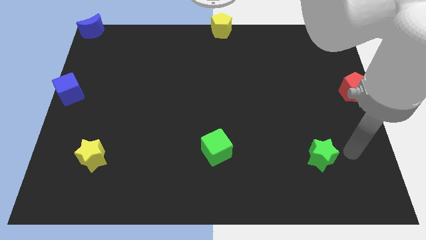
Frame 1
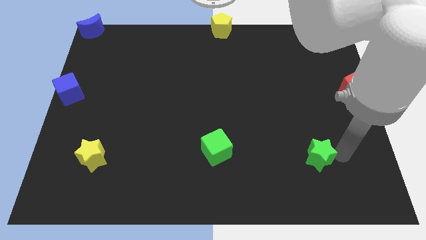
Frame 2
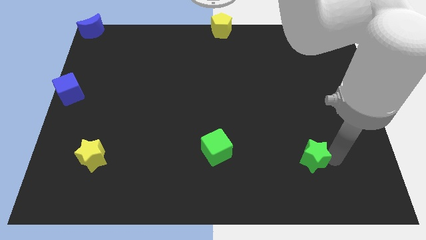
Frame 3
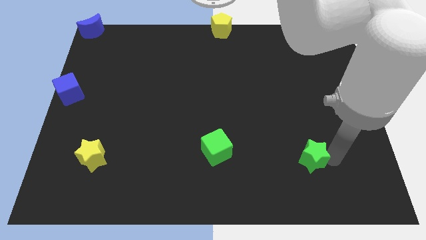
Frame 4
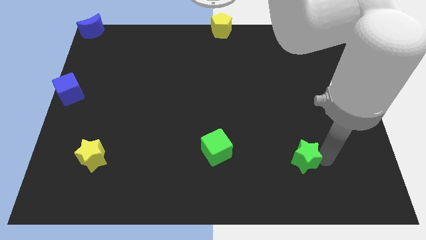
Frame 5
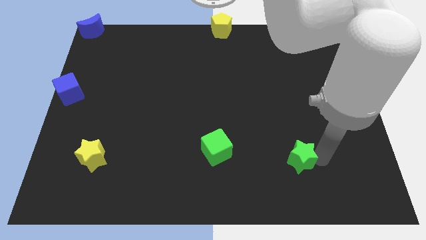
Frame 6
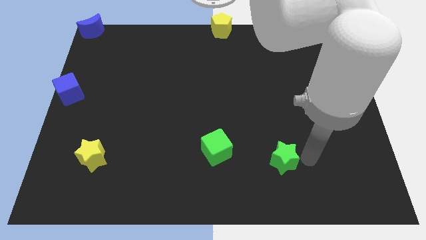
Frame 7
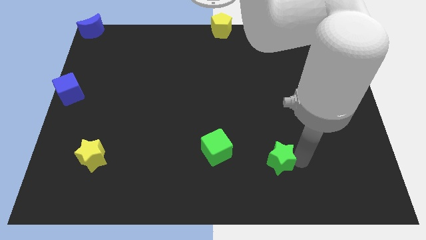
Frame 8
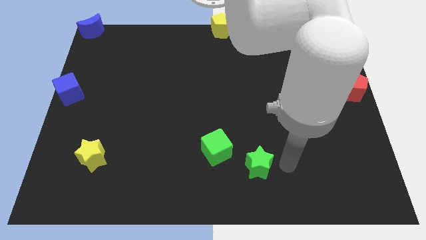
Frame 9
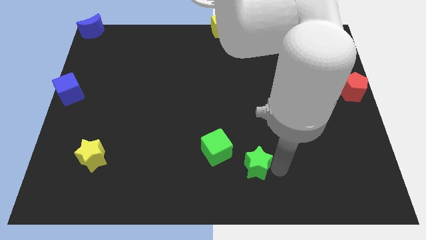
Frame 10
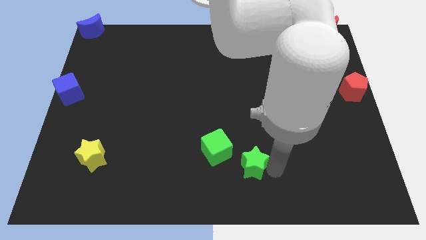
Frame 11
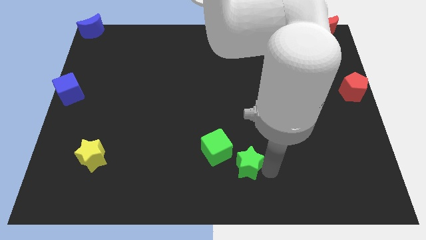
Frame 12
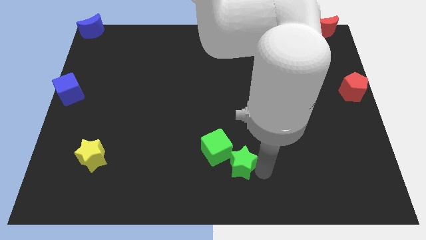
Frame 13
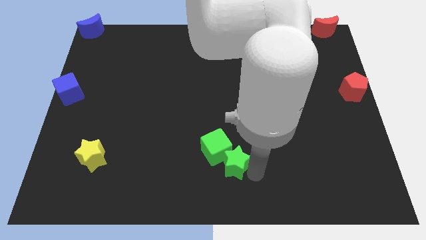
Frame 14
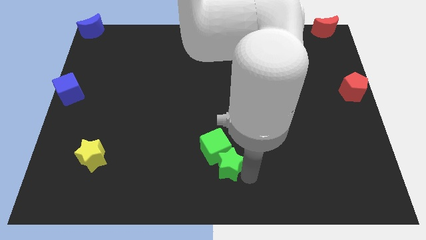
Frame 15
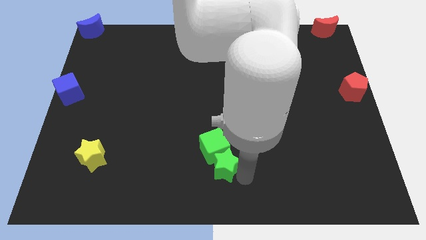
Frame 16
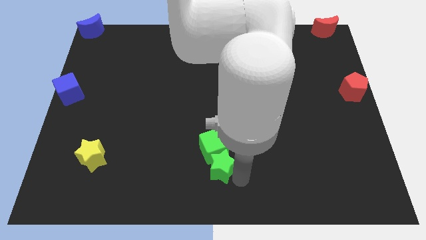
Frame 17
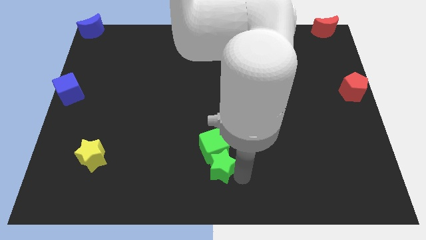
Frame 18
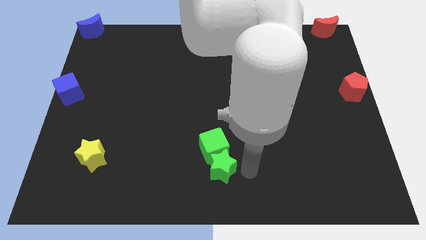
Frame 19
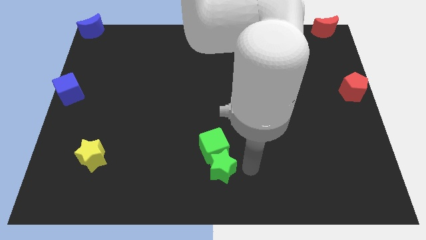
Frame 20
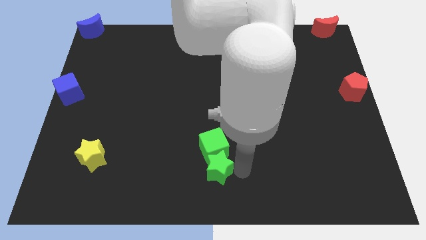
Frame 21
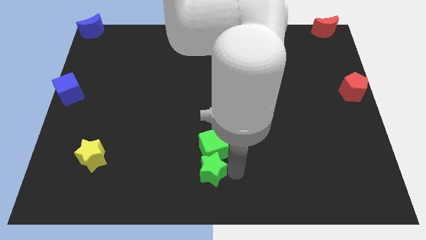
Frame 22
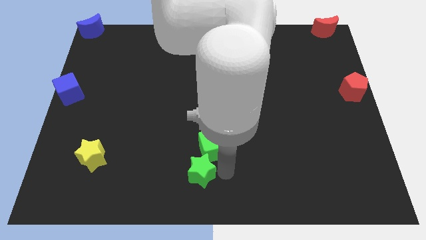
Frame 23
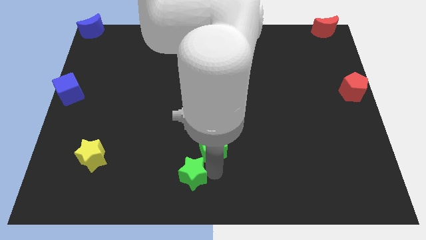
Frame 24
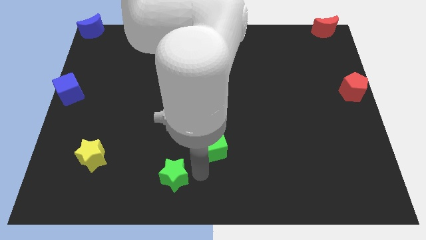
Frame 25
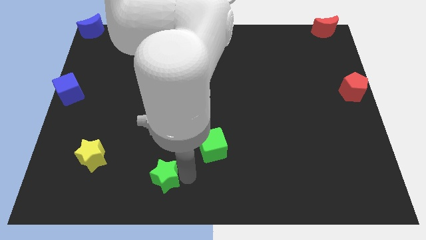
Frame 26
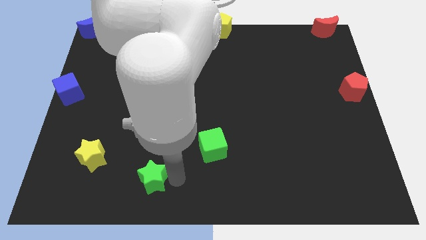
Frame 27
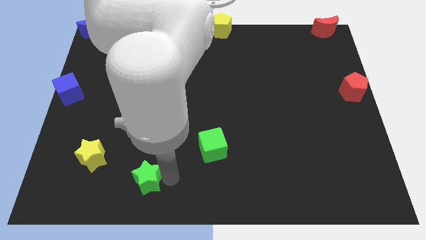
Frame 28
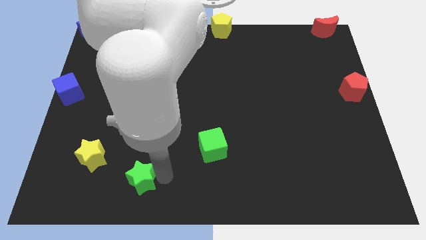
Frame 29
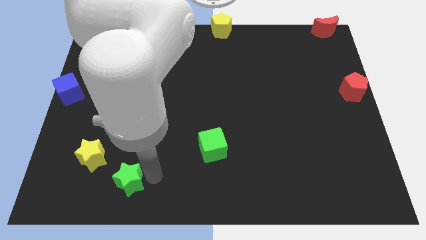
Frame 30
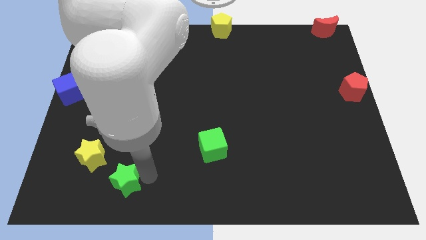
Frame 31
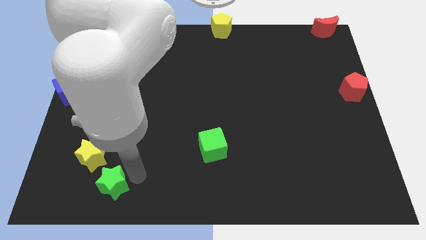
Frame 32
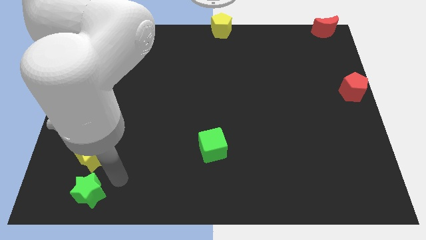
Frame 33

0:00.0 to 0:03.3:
push green star below yellow star

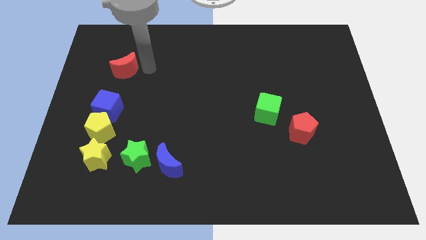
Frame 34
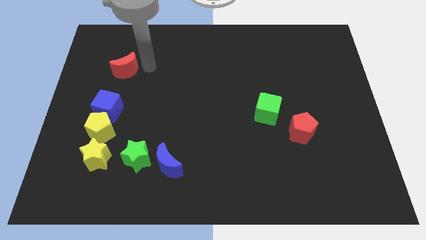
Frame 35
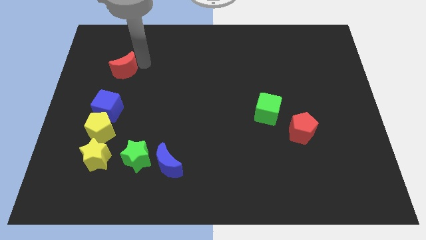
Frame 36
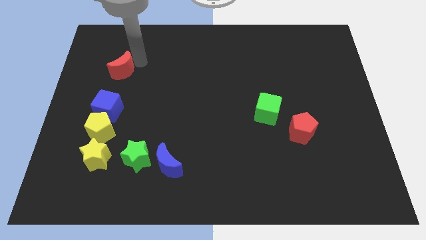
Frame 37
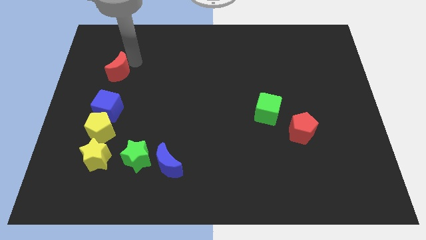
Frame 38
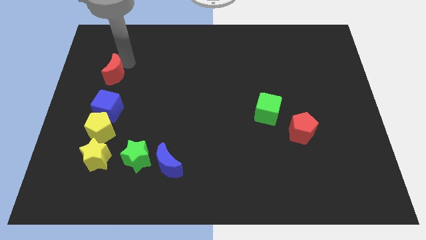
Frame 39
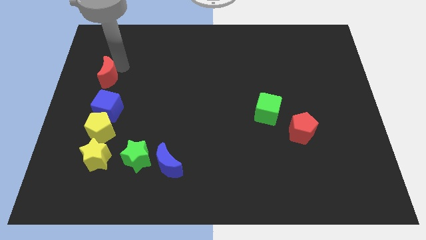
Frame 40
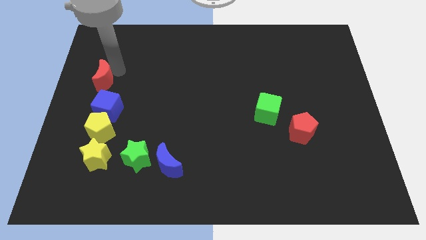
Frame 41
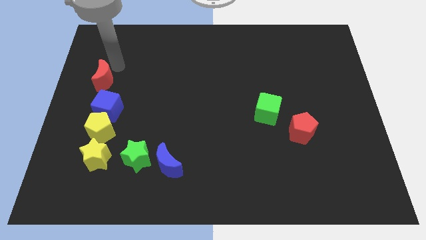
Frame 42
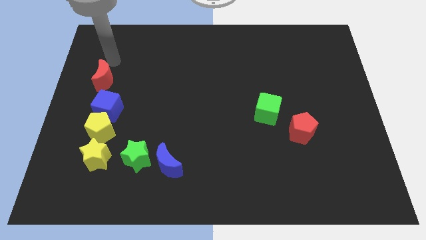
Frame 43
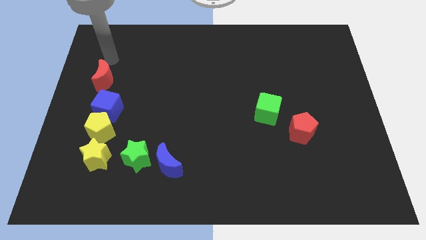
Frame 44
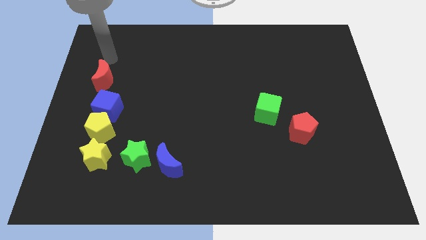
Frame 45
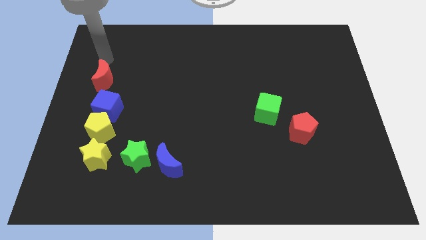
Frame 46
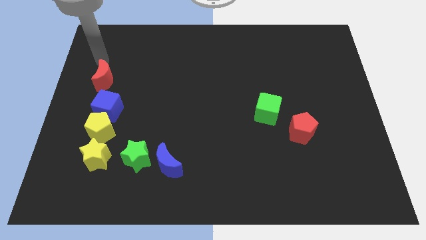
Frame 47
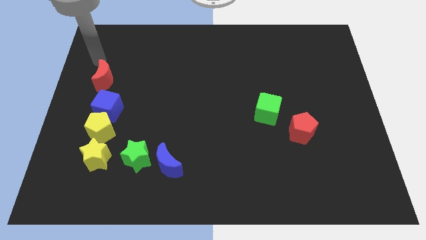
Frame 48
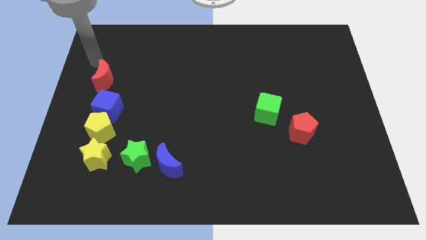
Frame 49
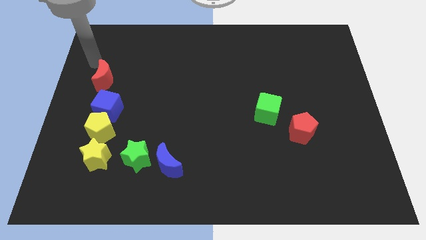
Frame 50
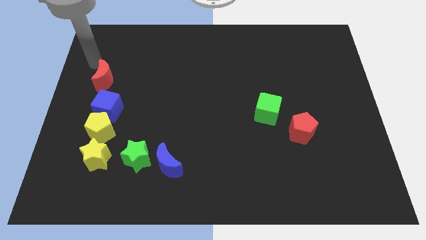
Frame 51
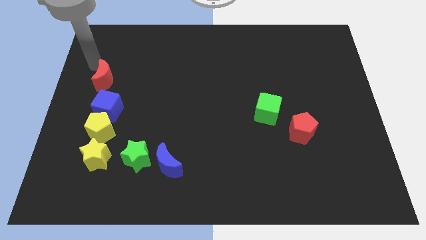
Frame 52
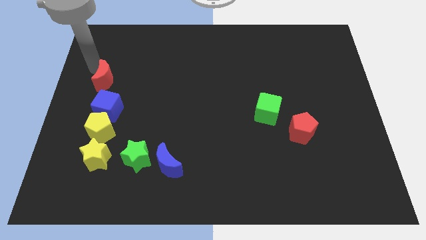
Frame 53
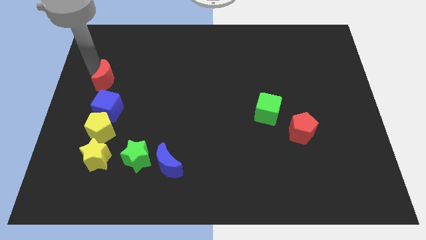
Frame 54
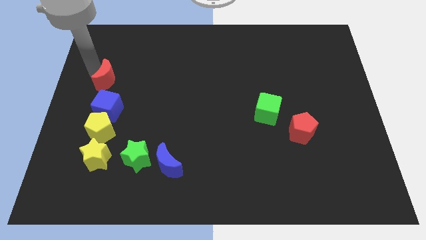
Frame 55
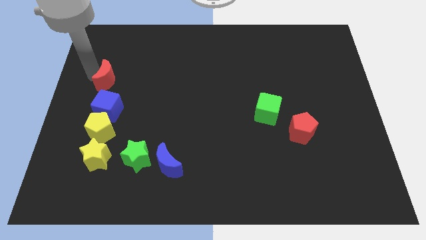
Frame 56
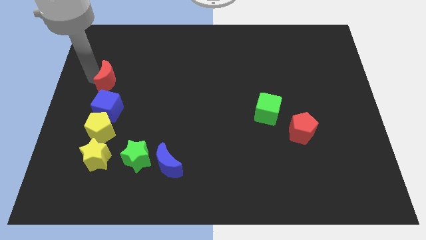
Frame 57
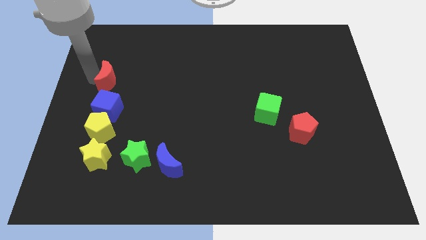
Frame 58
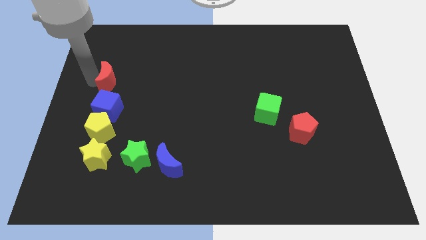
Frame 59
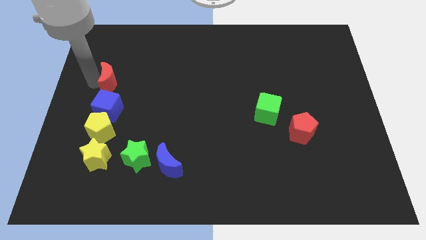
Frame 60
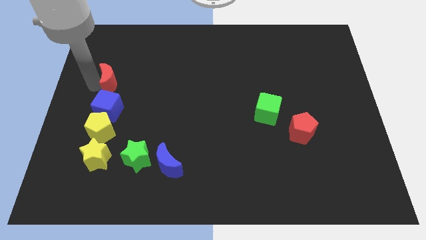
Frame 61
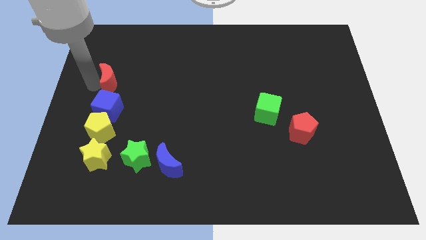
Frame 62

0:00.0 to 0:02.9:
move the red moon to the top of group of blocks to form vertical line

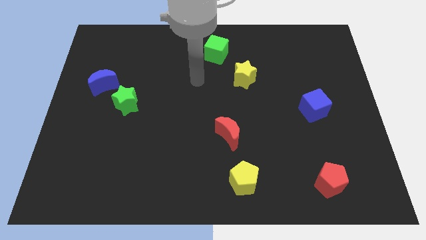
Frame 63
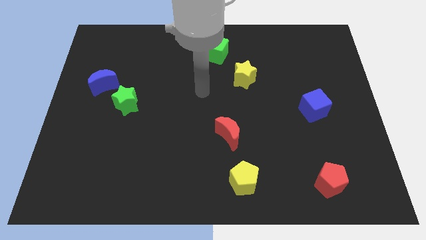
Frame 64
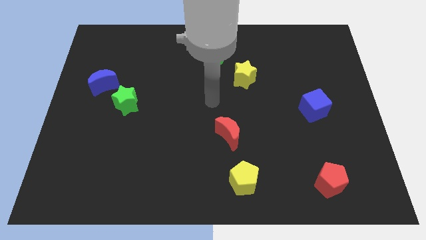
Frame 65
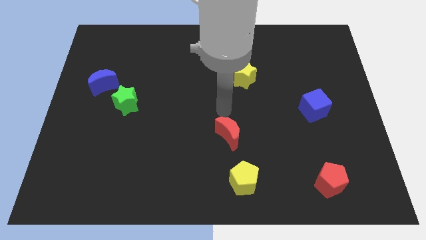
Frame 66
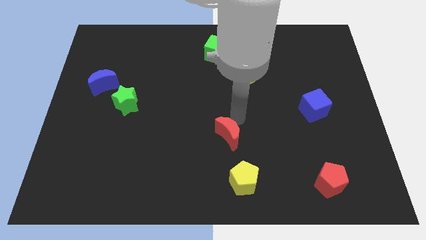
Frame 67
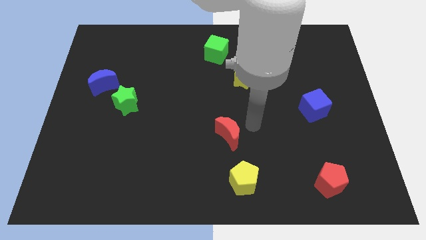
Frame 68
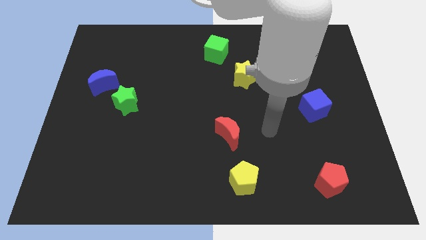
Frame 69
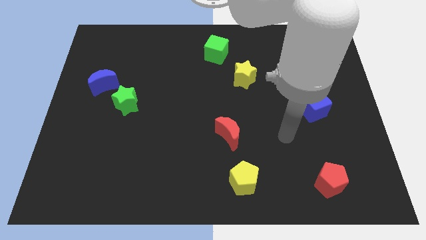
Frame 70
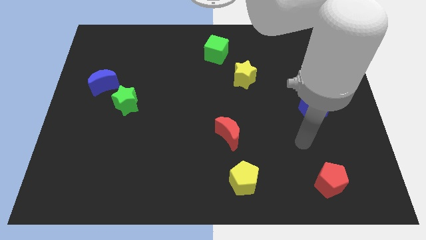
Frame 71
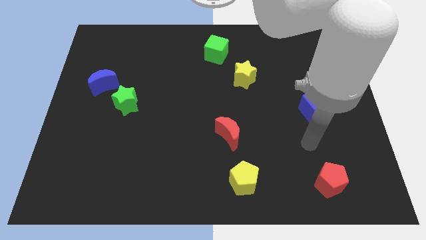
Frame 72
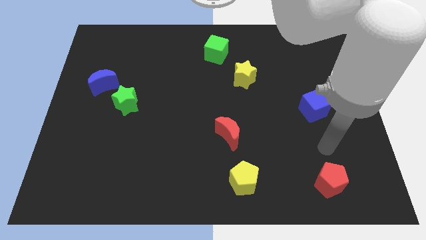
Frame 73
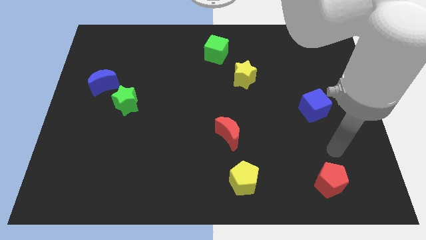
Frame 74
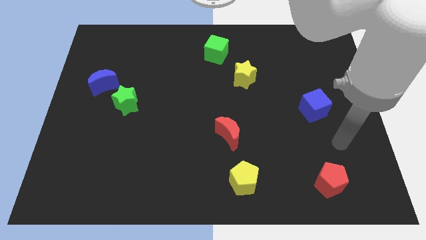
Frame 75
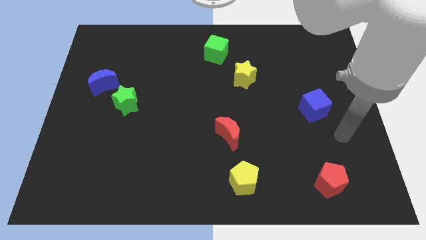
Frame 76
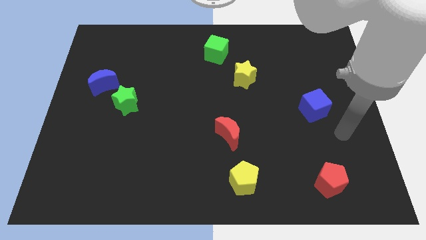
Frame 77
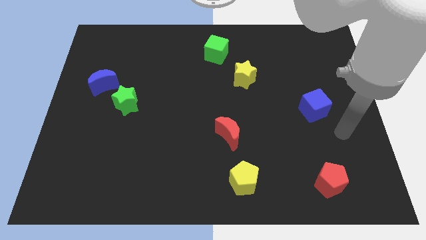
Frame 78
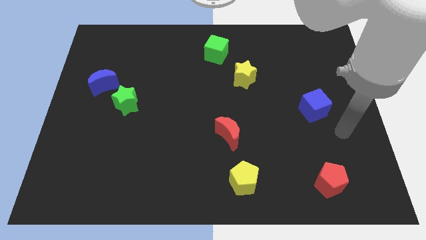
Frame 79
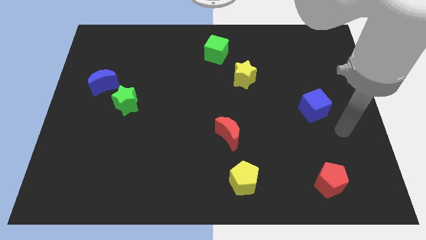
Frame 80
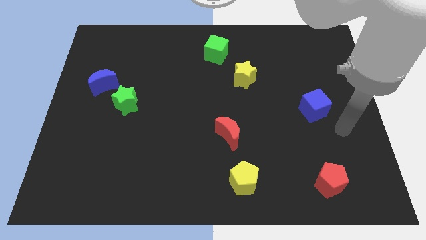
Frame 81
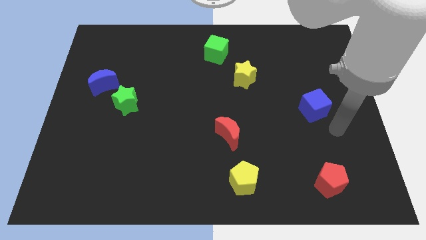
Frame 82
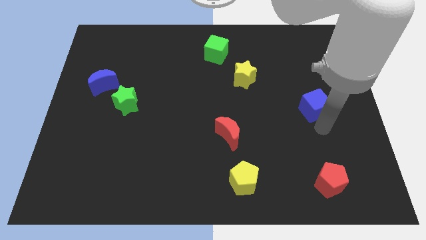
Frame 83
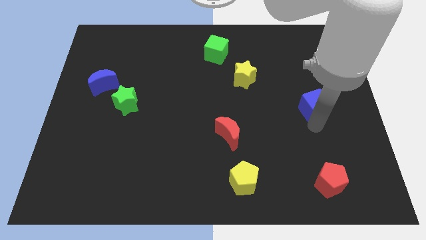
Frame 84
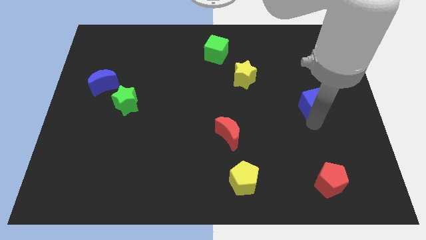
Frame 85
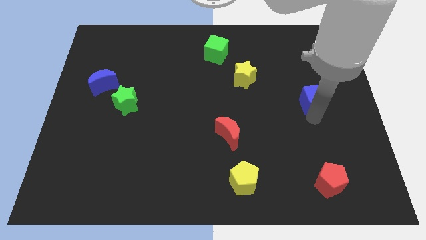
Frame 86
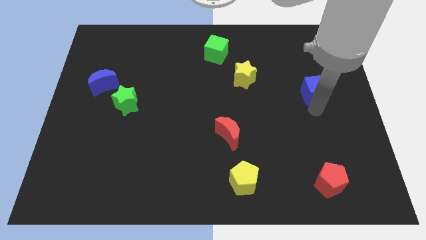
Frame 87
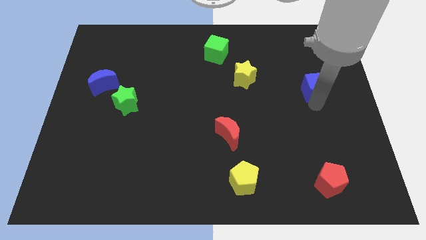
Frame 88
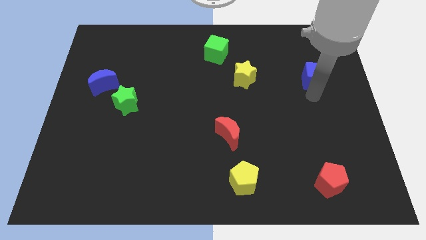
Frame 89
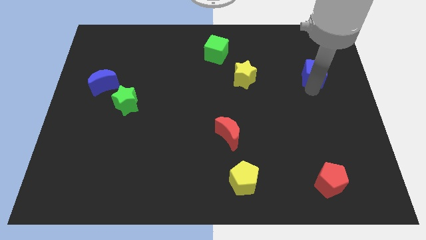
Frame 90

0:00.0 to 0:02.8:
move the blue cube to the right of the yellow star
